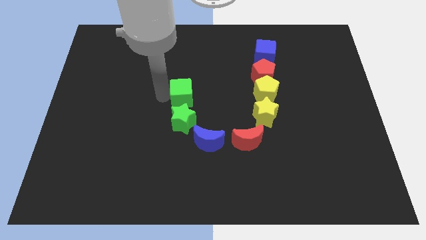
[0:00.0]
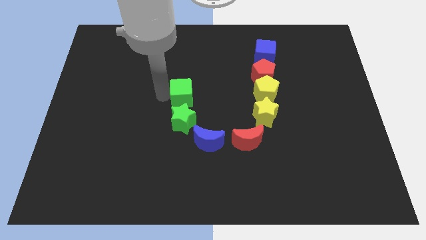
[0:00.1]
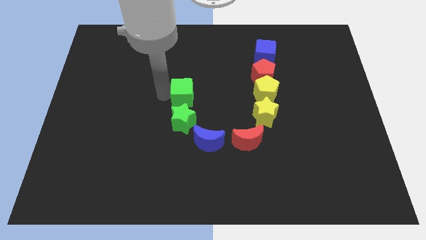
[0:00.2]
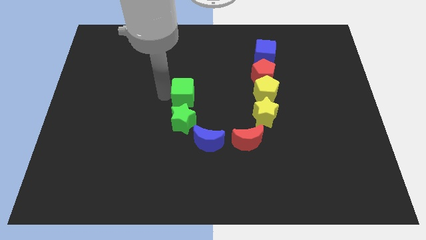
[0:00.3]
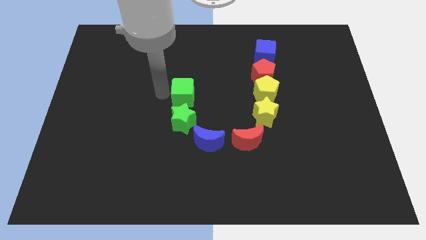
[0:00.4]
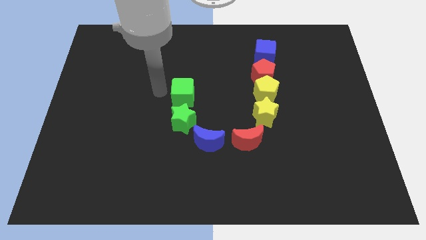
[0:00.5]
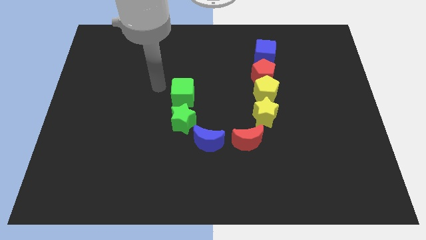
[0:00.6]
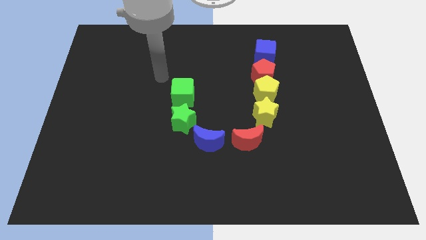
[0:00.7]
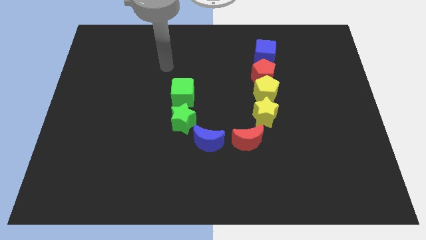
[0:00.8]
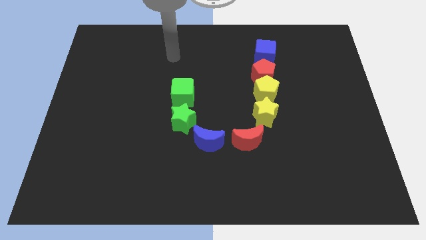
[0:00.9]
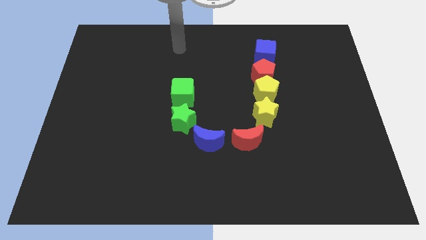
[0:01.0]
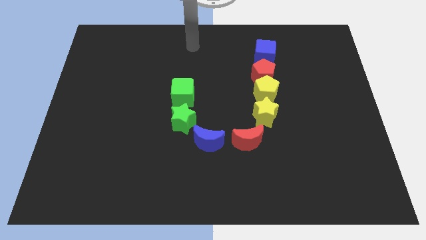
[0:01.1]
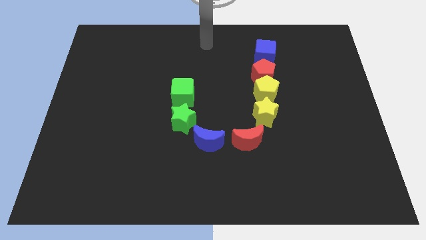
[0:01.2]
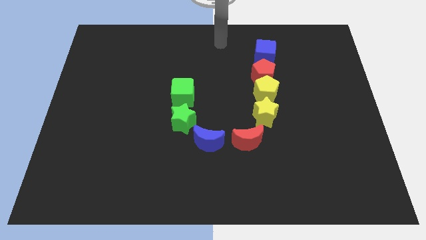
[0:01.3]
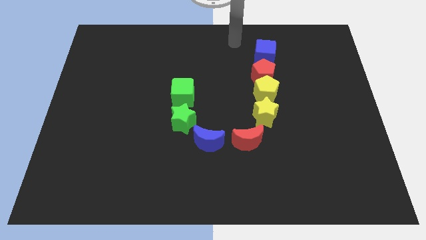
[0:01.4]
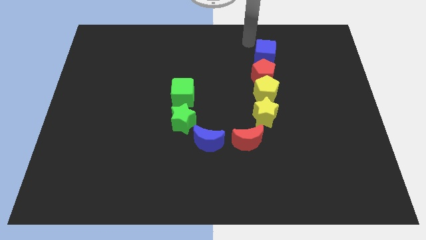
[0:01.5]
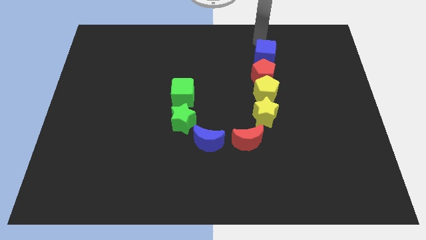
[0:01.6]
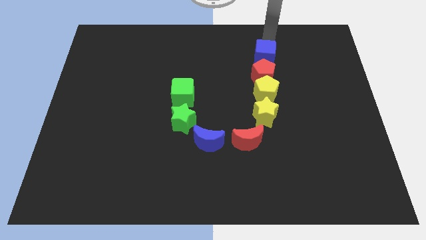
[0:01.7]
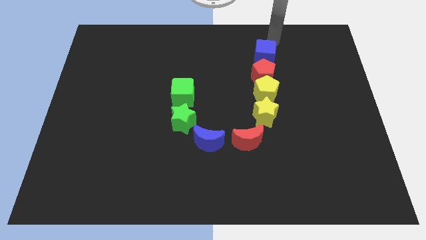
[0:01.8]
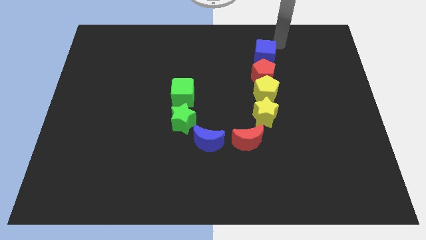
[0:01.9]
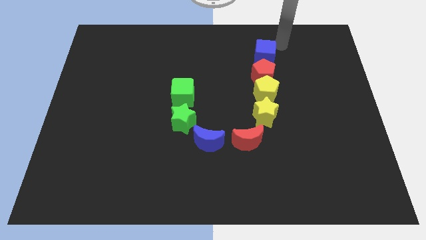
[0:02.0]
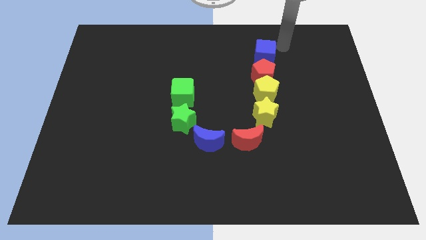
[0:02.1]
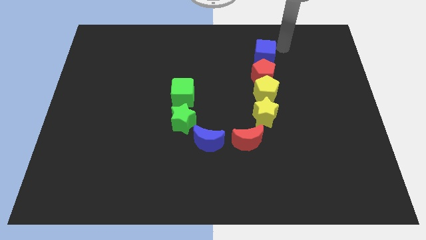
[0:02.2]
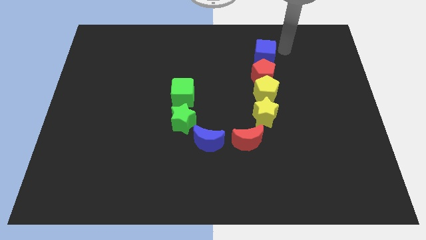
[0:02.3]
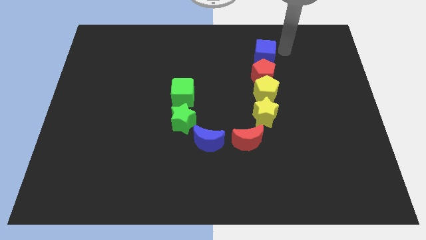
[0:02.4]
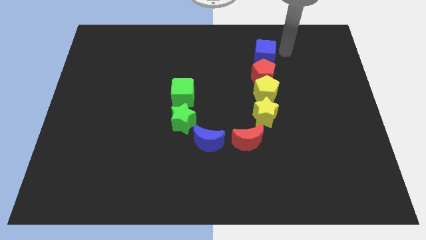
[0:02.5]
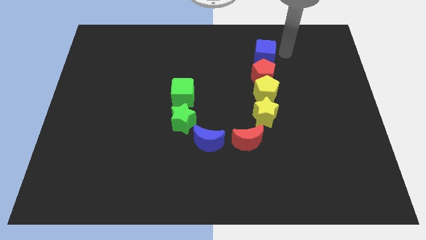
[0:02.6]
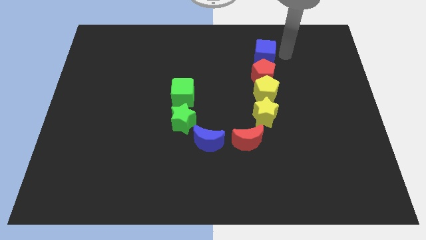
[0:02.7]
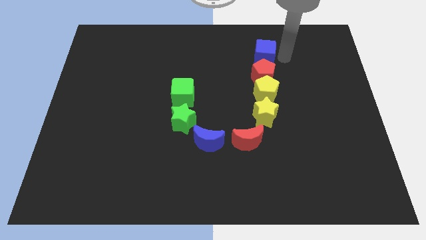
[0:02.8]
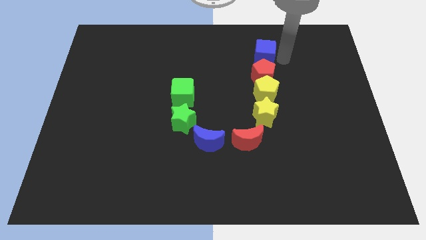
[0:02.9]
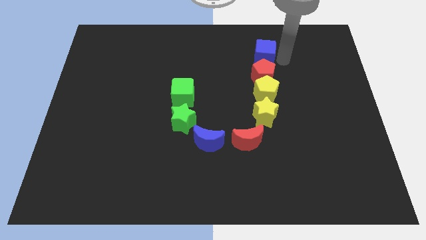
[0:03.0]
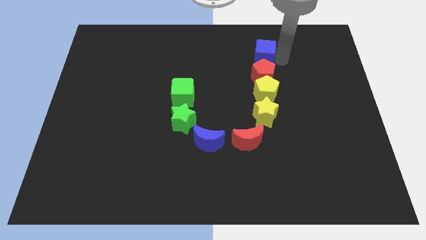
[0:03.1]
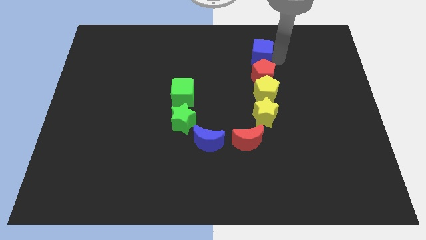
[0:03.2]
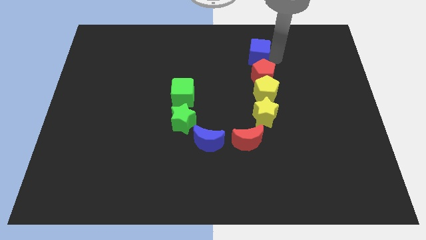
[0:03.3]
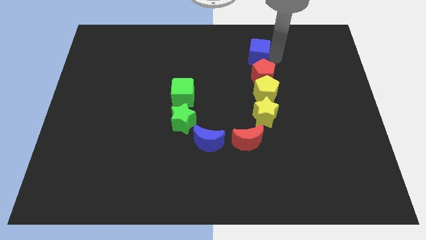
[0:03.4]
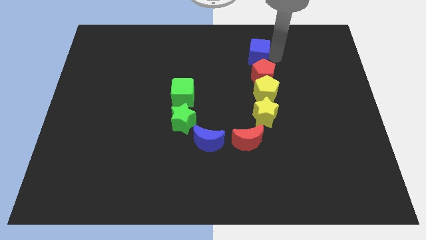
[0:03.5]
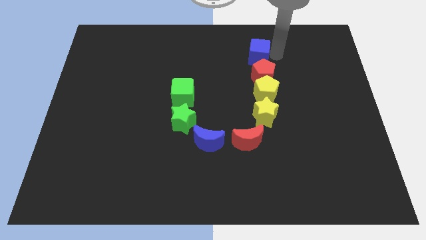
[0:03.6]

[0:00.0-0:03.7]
move your arm away from the green cube

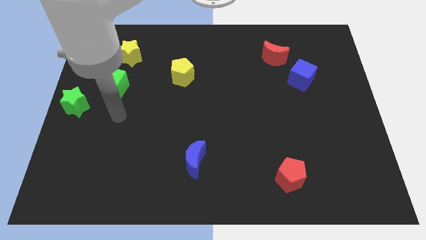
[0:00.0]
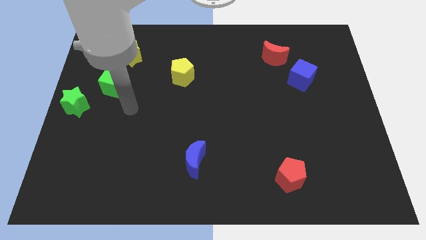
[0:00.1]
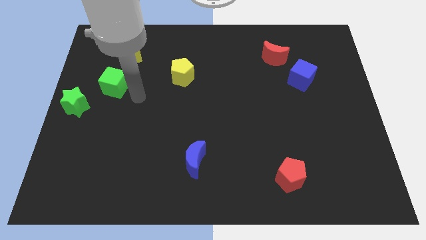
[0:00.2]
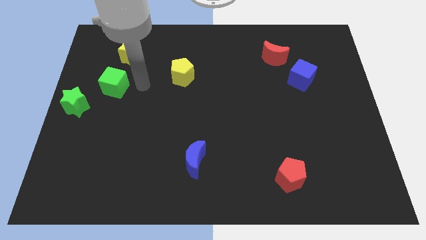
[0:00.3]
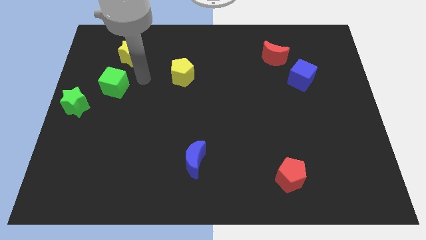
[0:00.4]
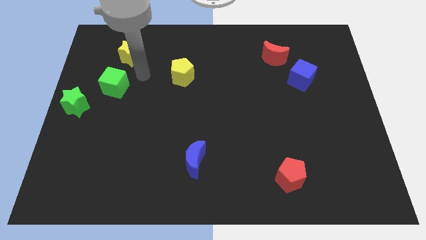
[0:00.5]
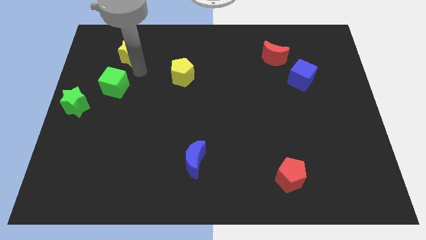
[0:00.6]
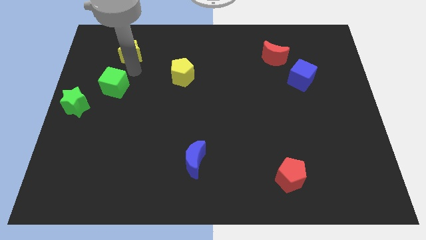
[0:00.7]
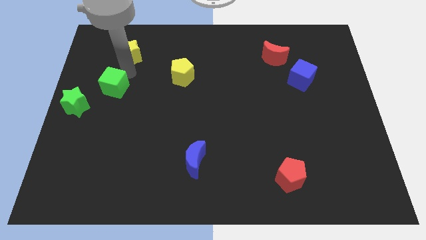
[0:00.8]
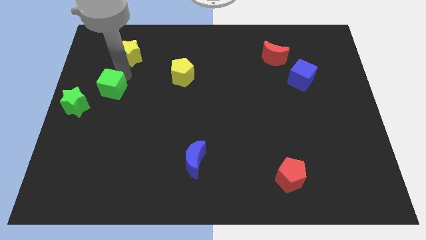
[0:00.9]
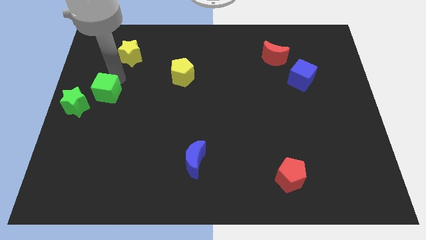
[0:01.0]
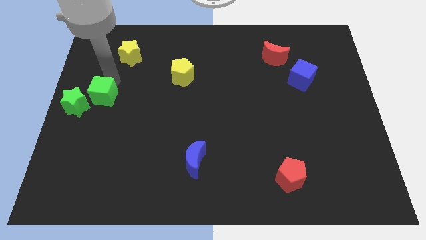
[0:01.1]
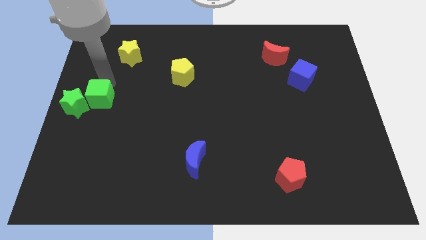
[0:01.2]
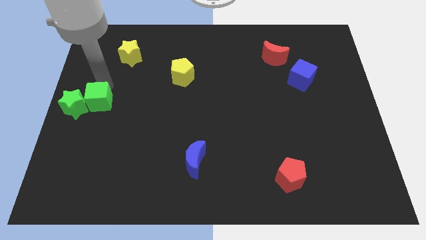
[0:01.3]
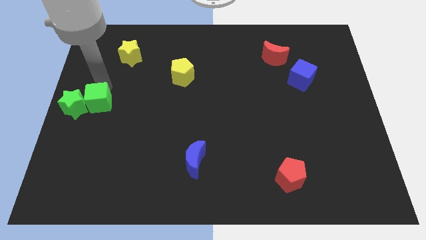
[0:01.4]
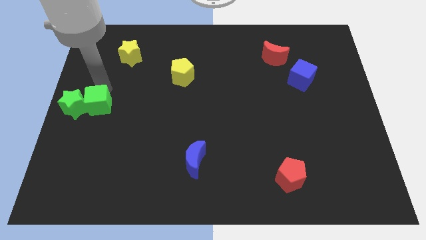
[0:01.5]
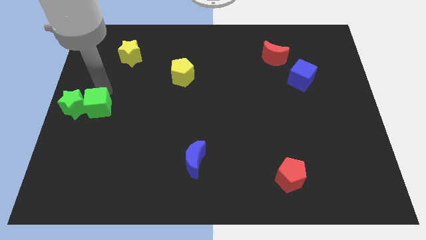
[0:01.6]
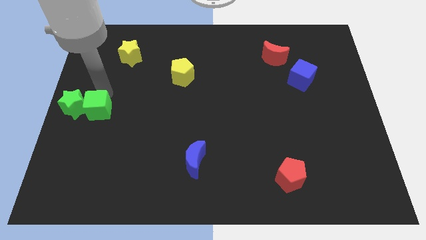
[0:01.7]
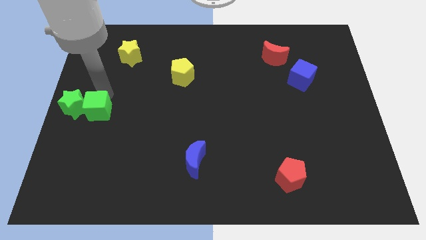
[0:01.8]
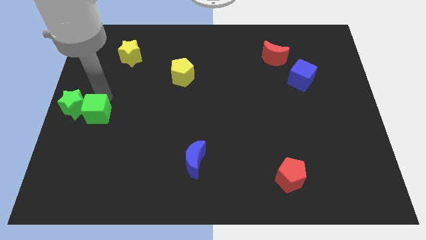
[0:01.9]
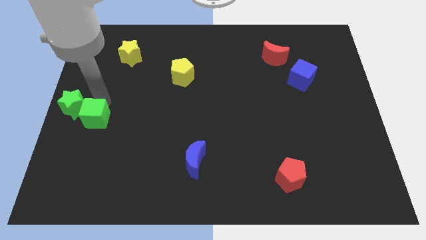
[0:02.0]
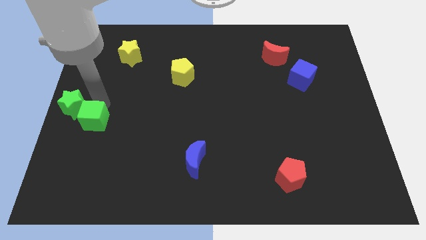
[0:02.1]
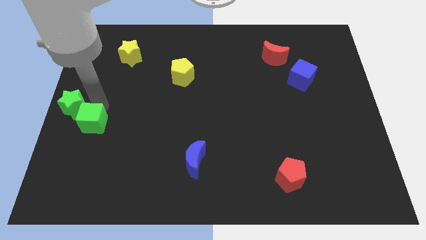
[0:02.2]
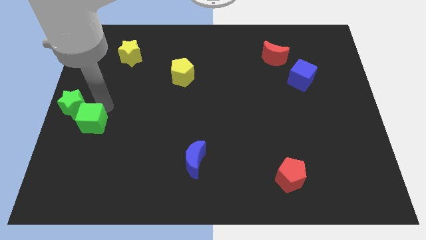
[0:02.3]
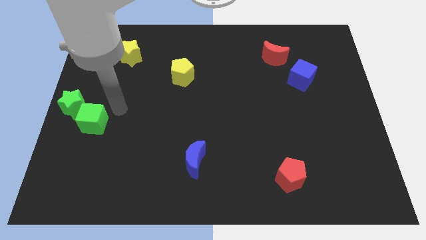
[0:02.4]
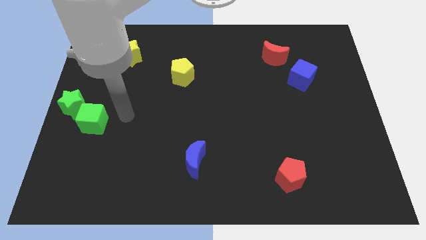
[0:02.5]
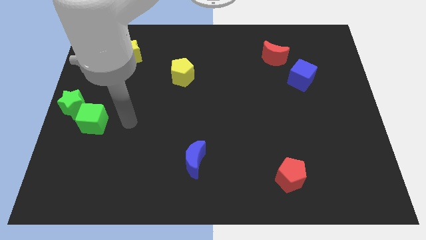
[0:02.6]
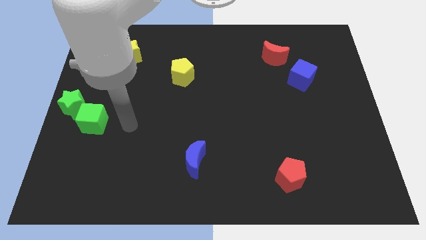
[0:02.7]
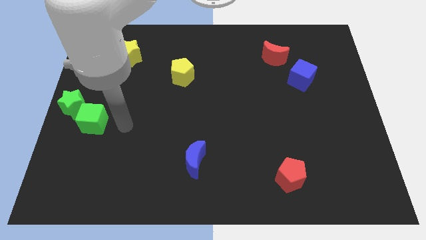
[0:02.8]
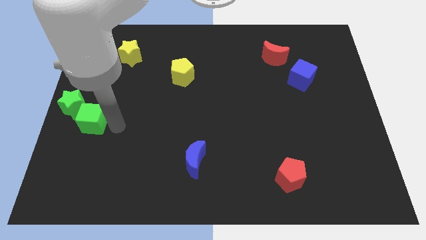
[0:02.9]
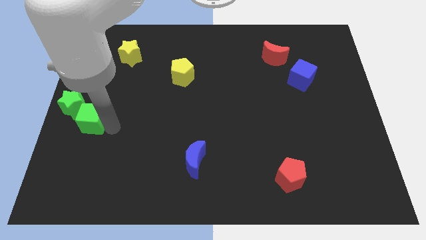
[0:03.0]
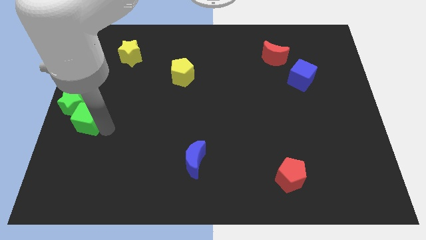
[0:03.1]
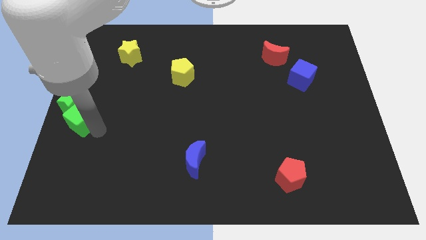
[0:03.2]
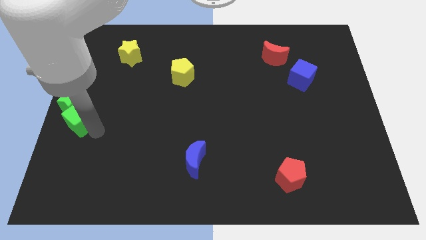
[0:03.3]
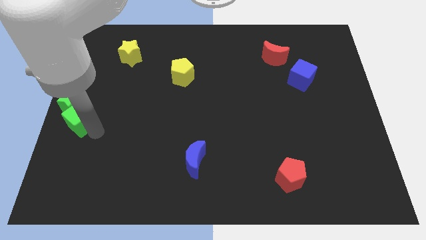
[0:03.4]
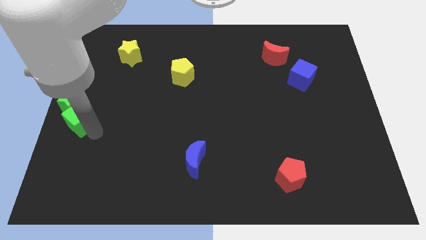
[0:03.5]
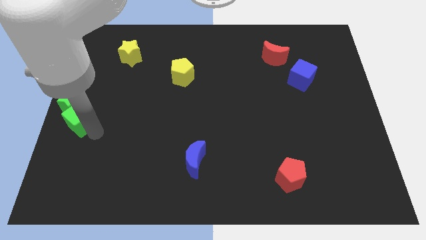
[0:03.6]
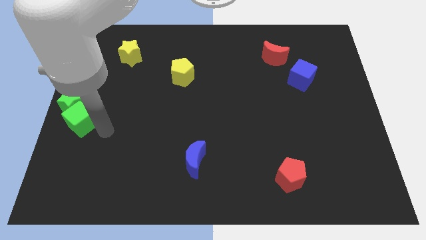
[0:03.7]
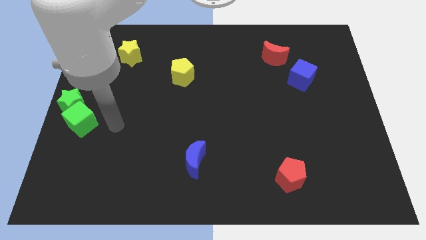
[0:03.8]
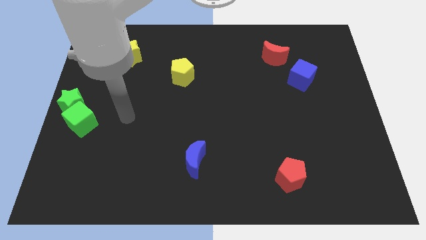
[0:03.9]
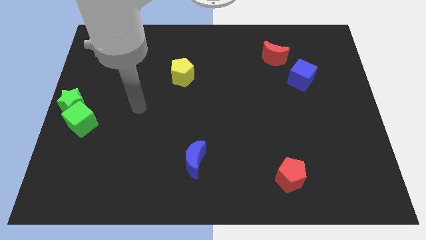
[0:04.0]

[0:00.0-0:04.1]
push the green cube into the green star

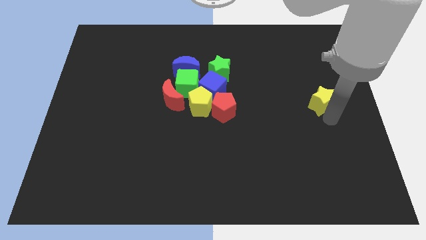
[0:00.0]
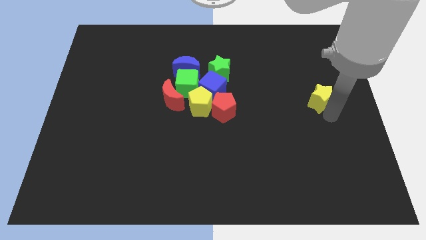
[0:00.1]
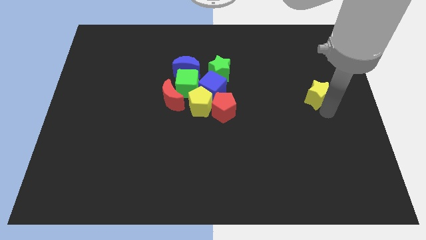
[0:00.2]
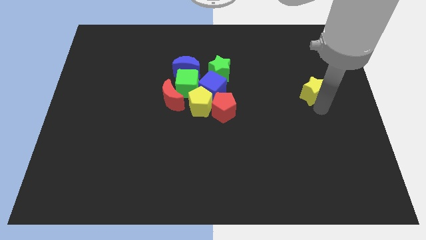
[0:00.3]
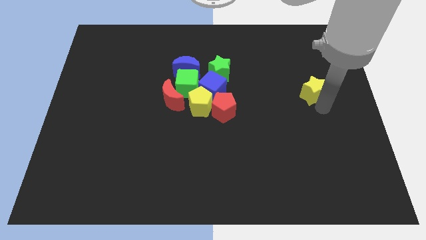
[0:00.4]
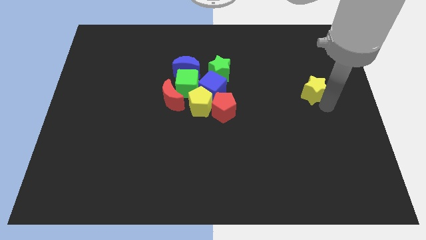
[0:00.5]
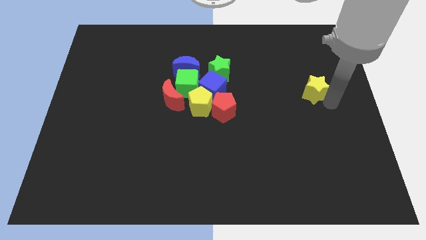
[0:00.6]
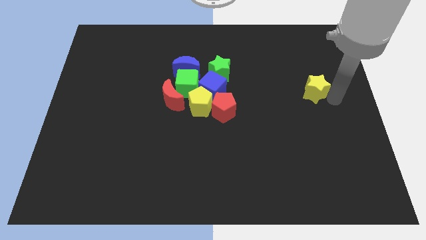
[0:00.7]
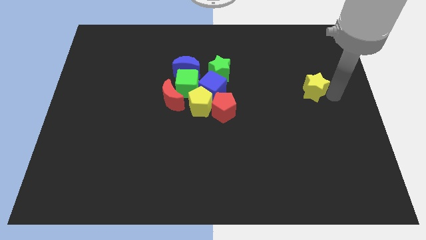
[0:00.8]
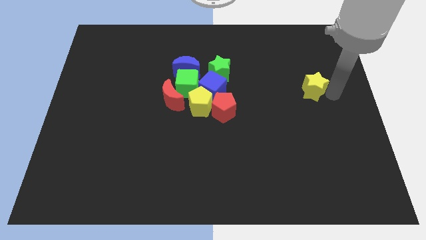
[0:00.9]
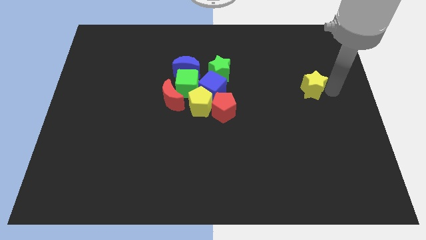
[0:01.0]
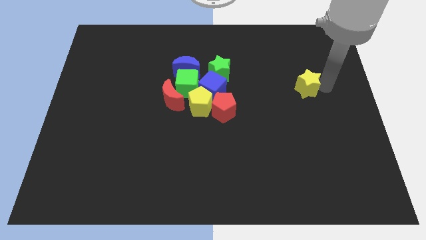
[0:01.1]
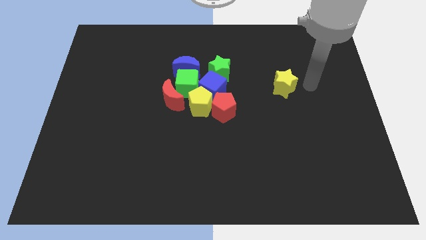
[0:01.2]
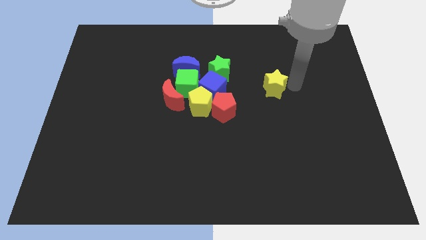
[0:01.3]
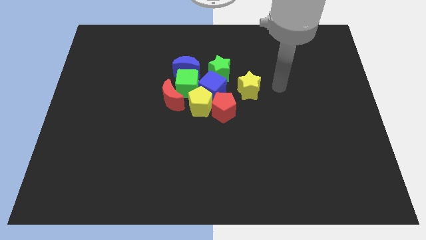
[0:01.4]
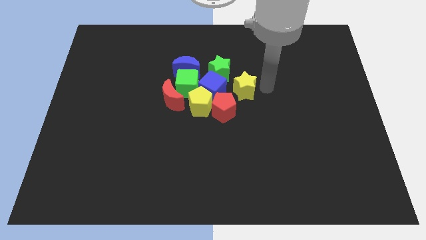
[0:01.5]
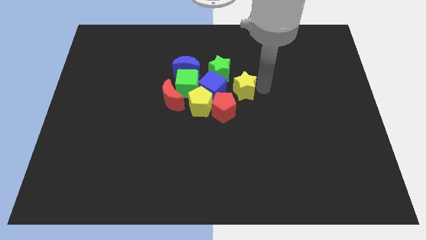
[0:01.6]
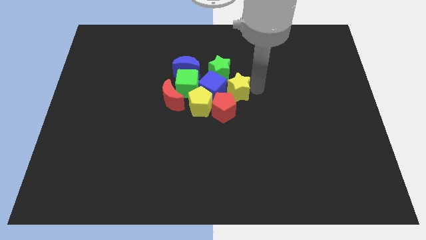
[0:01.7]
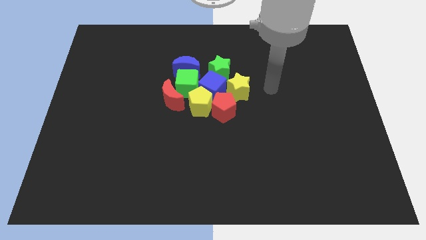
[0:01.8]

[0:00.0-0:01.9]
push the yellow star towards the center of the board
